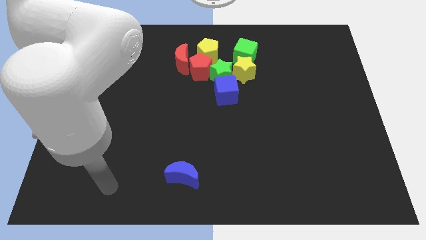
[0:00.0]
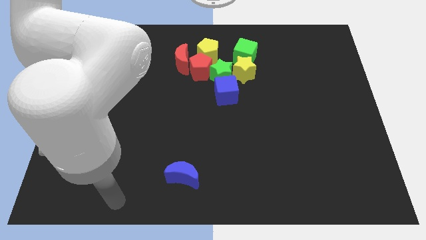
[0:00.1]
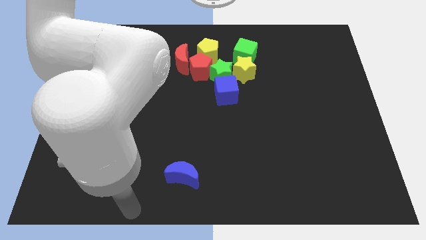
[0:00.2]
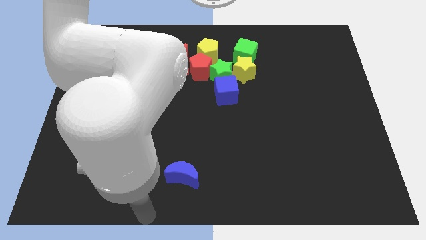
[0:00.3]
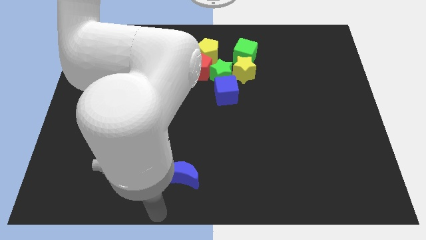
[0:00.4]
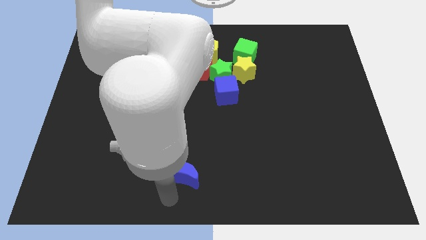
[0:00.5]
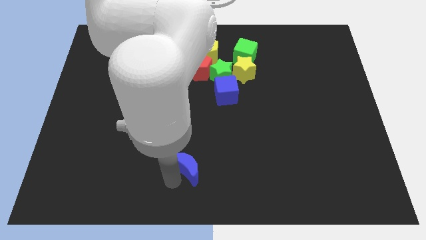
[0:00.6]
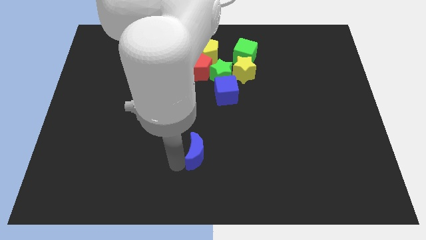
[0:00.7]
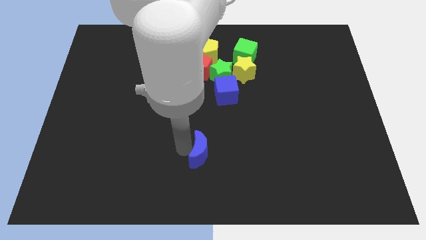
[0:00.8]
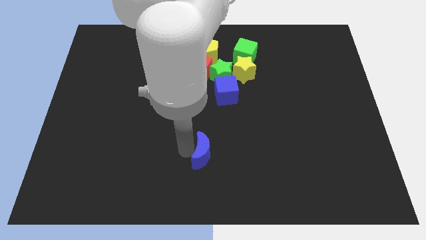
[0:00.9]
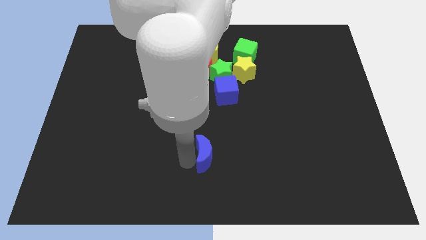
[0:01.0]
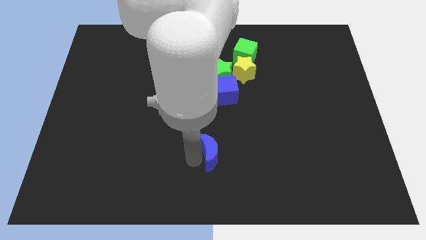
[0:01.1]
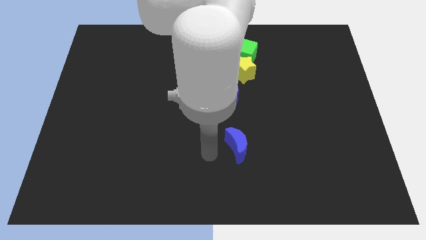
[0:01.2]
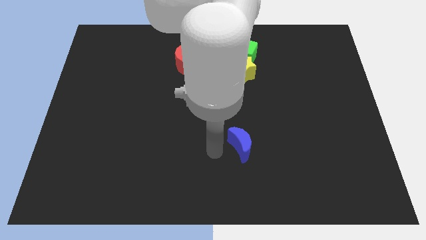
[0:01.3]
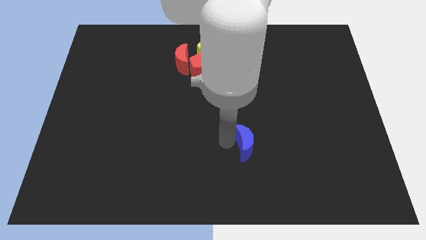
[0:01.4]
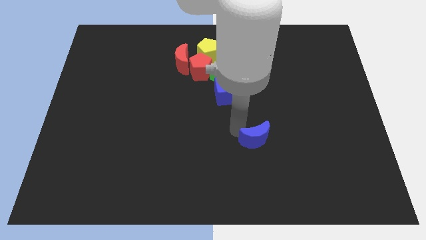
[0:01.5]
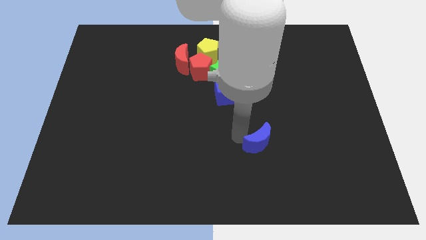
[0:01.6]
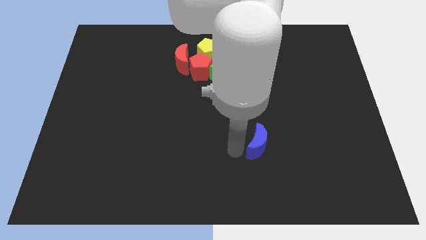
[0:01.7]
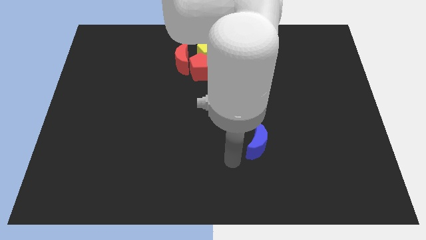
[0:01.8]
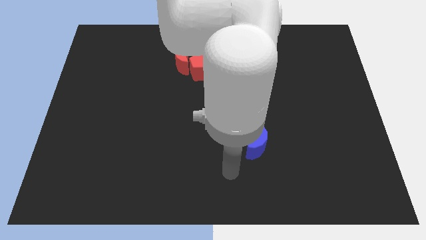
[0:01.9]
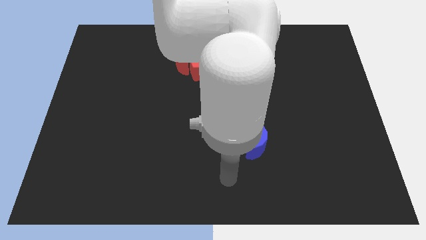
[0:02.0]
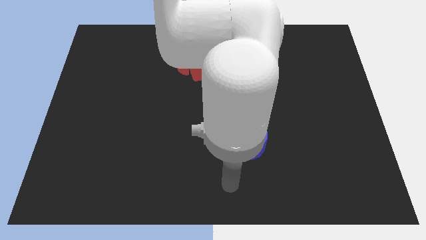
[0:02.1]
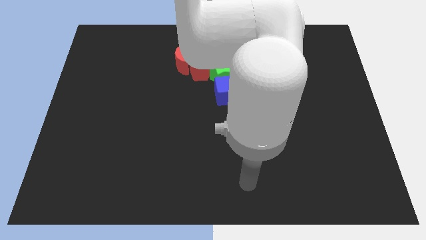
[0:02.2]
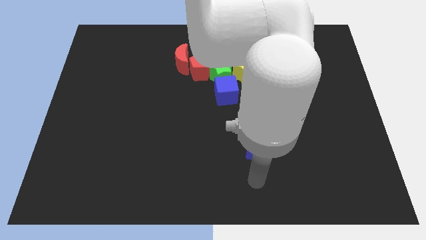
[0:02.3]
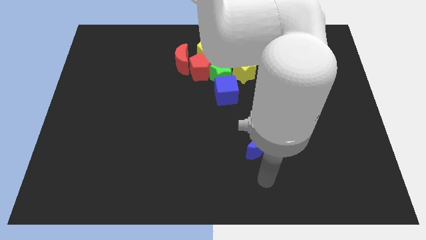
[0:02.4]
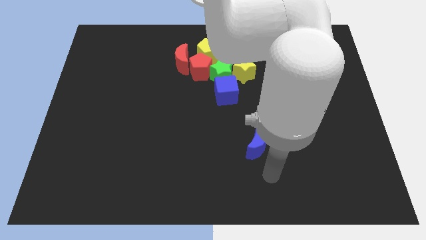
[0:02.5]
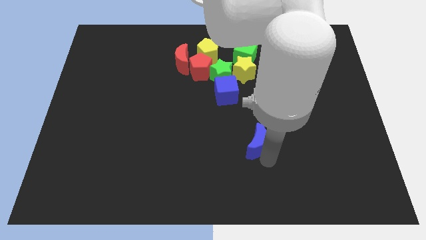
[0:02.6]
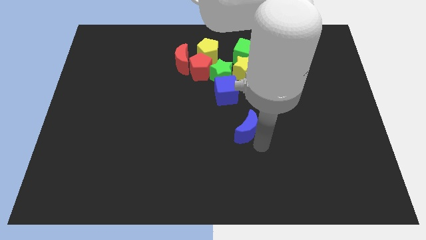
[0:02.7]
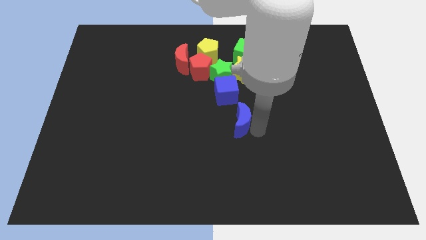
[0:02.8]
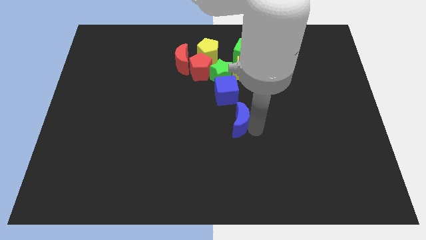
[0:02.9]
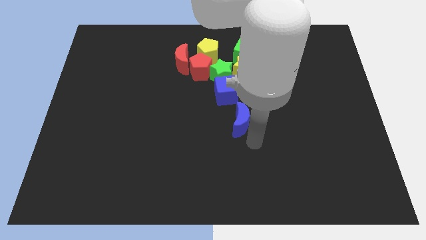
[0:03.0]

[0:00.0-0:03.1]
place blue moon to the bottom right of blue cube

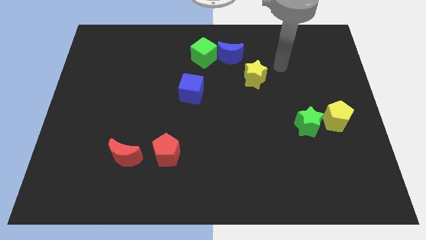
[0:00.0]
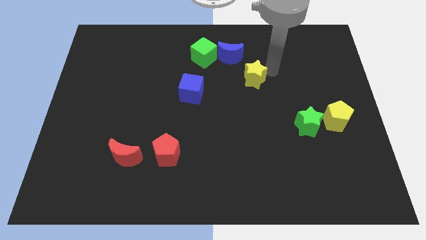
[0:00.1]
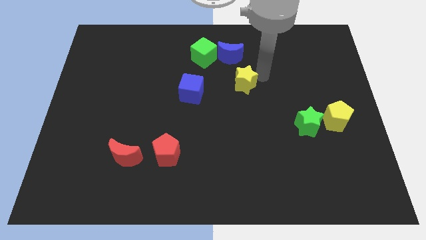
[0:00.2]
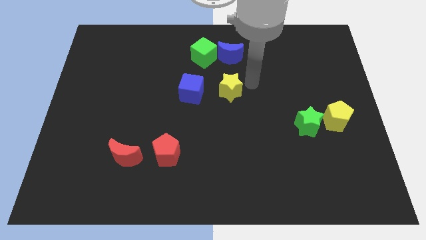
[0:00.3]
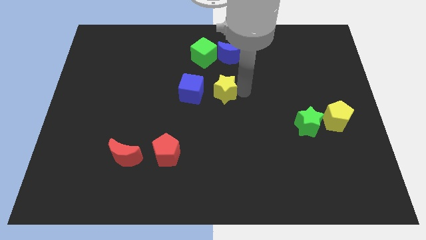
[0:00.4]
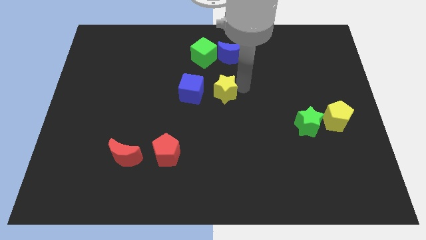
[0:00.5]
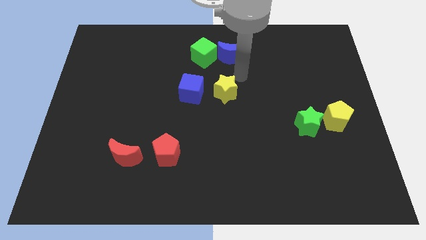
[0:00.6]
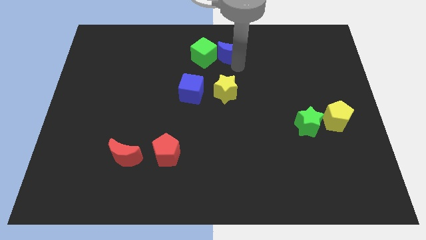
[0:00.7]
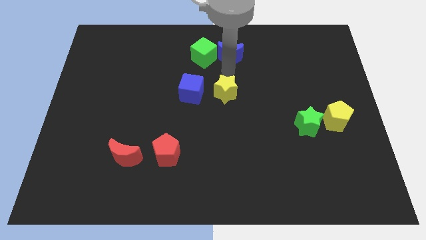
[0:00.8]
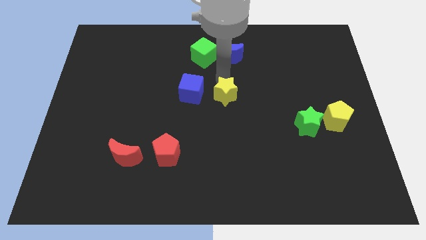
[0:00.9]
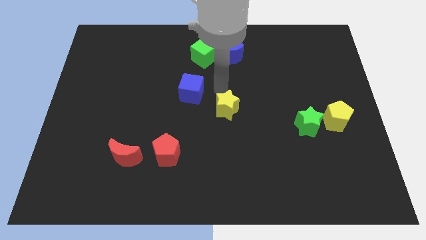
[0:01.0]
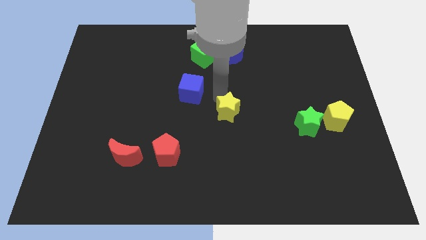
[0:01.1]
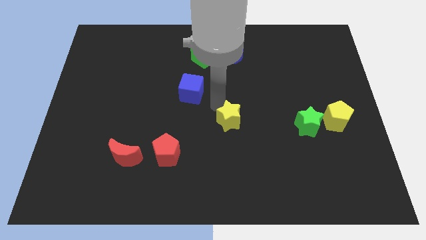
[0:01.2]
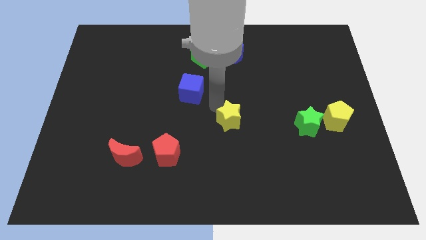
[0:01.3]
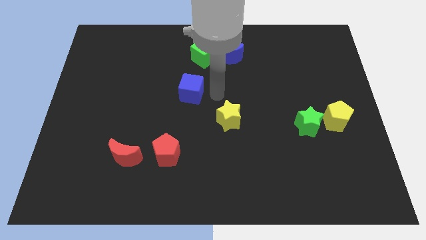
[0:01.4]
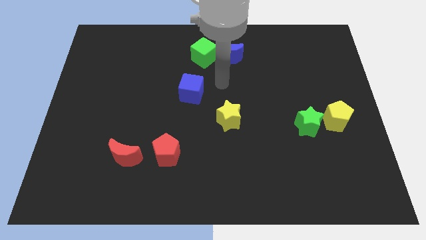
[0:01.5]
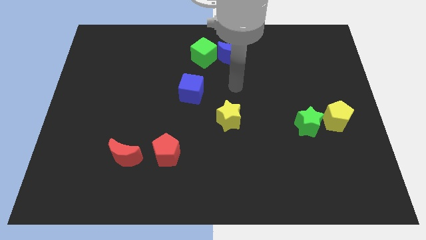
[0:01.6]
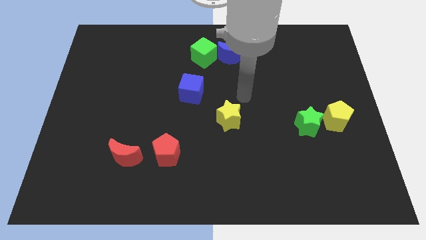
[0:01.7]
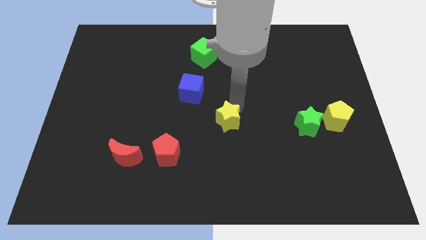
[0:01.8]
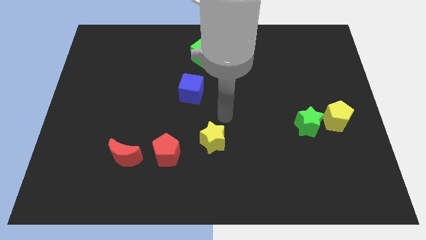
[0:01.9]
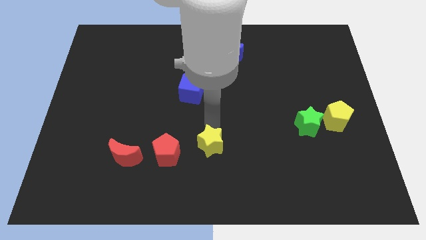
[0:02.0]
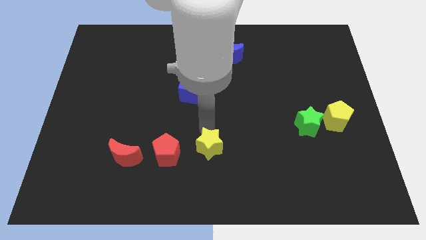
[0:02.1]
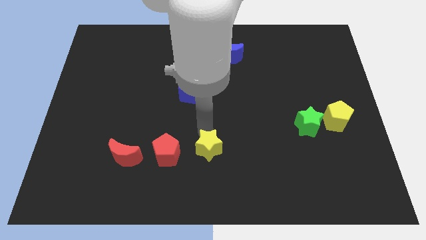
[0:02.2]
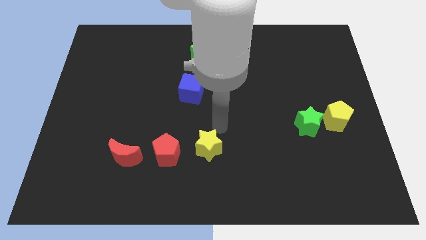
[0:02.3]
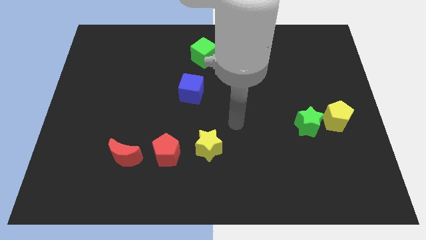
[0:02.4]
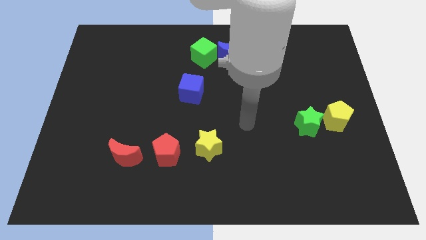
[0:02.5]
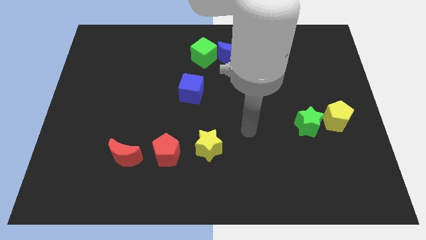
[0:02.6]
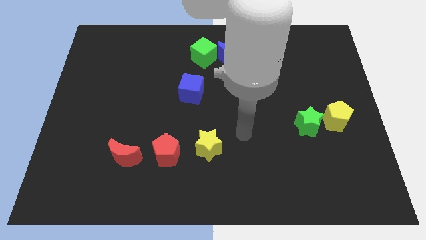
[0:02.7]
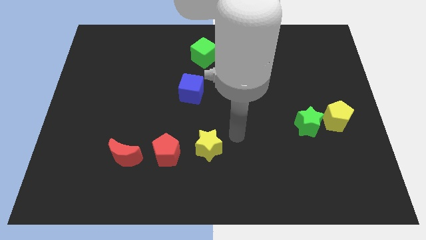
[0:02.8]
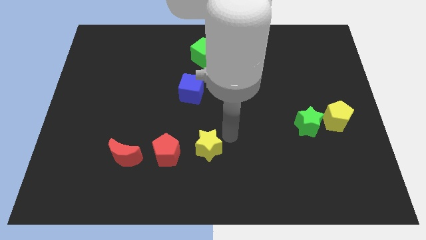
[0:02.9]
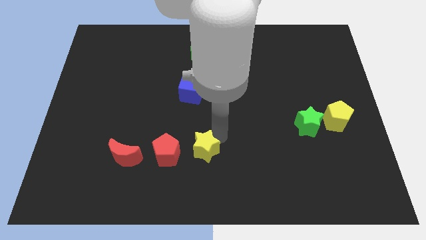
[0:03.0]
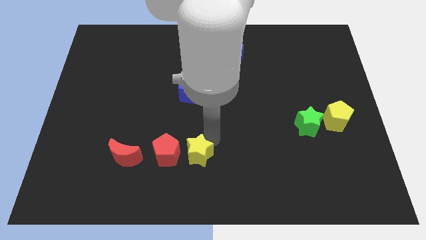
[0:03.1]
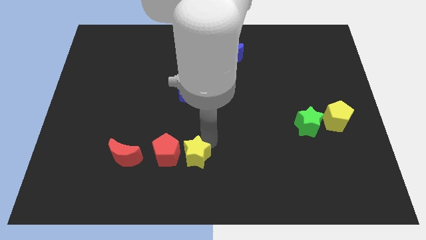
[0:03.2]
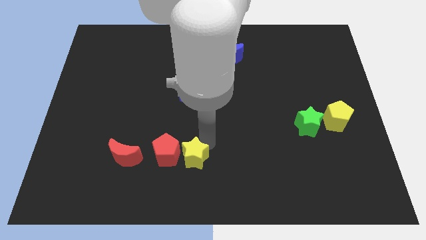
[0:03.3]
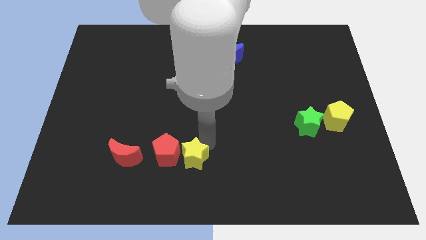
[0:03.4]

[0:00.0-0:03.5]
push yellow star to the bottom center

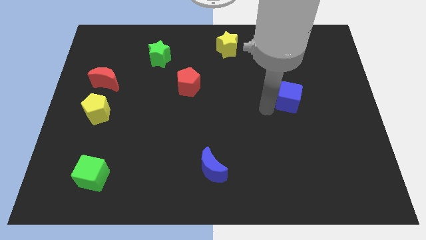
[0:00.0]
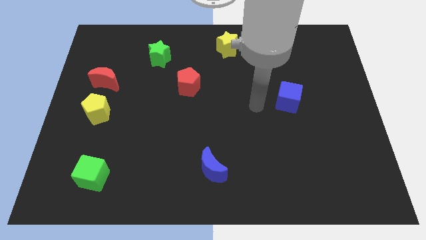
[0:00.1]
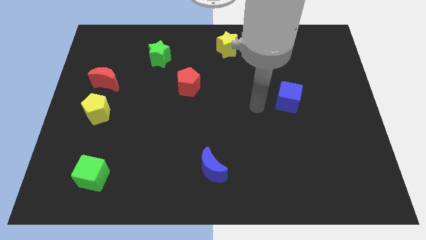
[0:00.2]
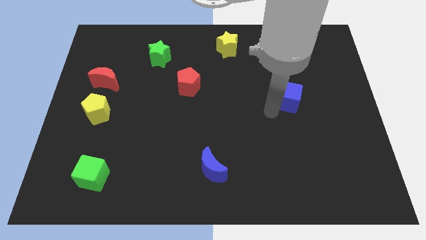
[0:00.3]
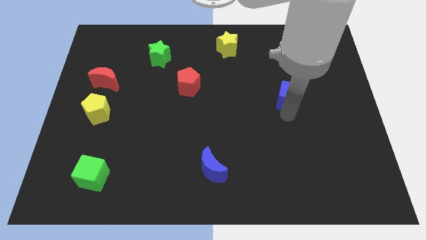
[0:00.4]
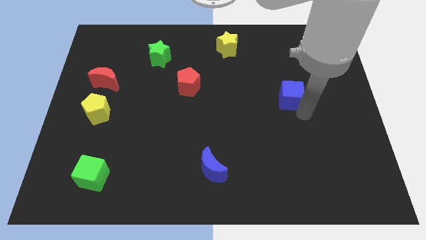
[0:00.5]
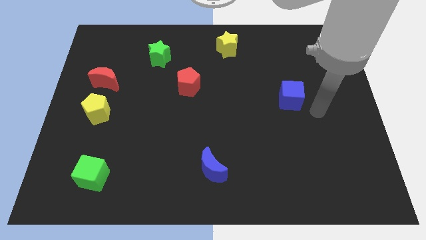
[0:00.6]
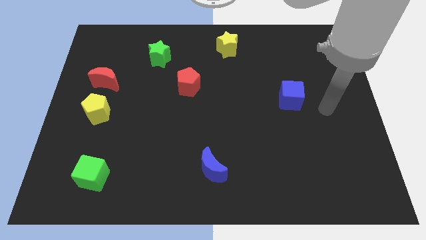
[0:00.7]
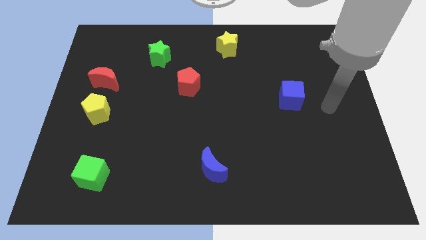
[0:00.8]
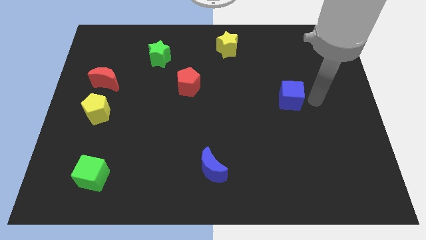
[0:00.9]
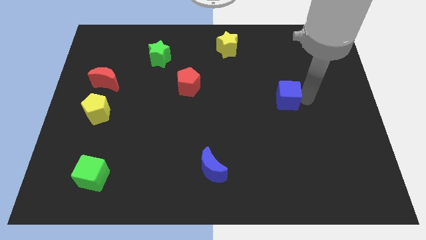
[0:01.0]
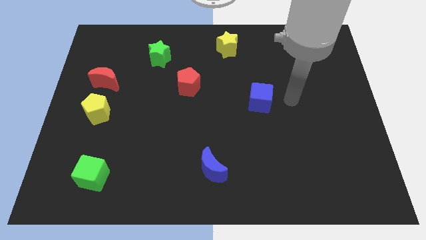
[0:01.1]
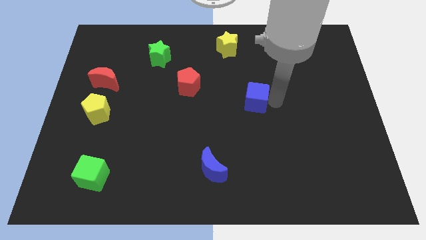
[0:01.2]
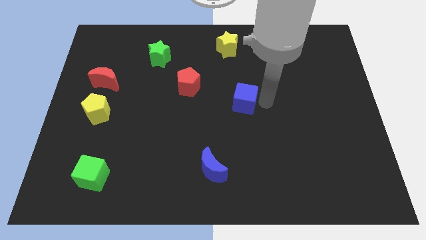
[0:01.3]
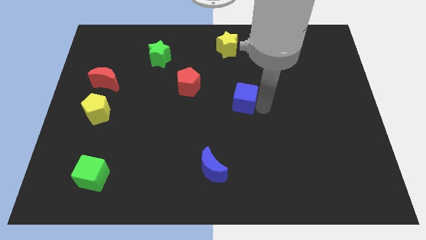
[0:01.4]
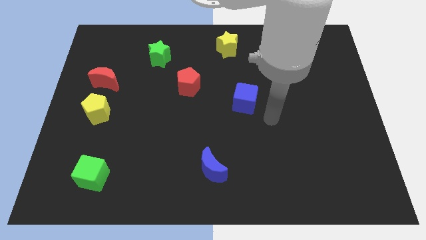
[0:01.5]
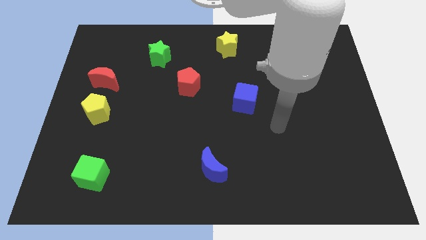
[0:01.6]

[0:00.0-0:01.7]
place blue cube to the bottom of the yellow star

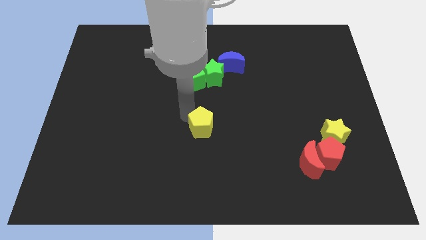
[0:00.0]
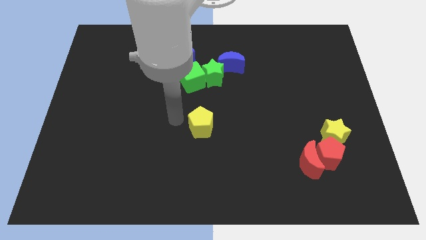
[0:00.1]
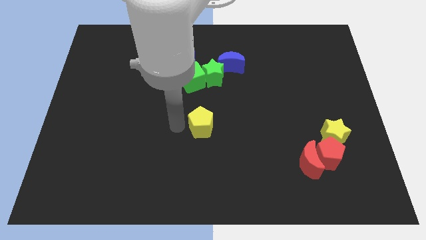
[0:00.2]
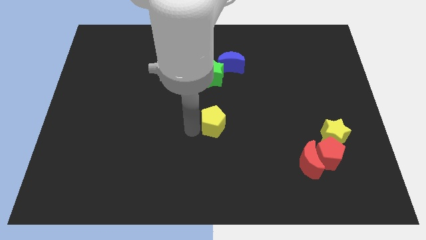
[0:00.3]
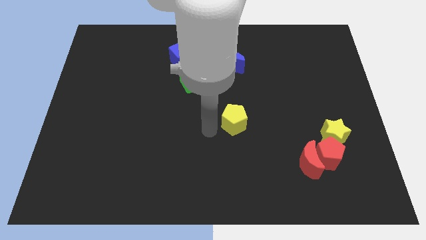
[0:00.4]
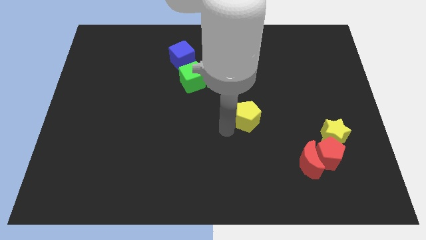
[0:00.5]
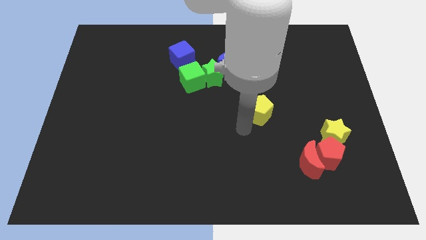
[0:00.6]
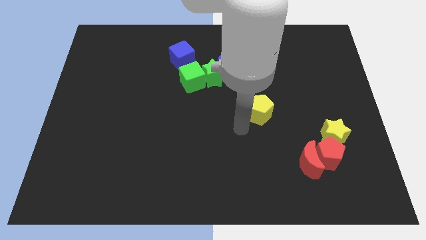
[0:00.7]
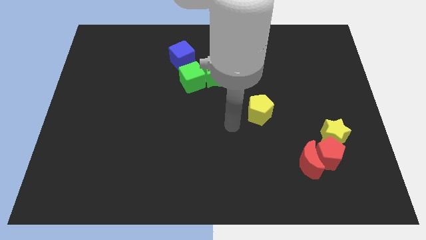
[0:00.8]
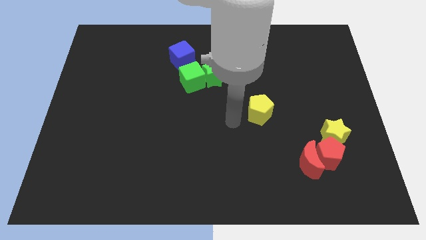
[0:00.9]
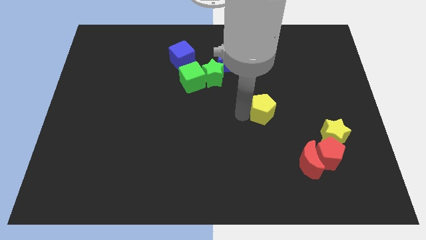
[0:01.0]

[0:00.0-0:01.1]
push the yellow pentagon in between the green cube and yellow star
